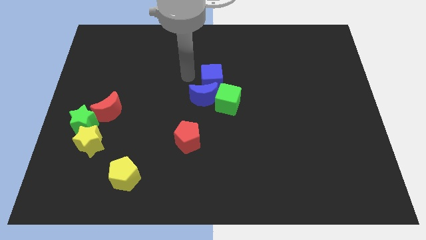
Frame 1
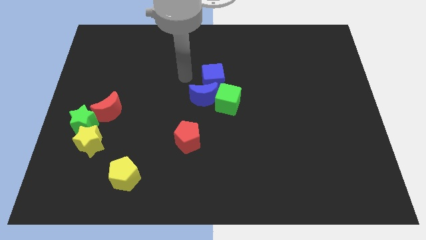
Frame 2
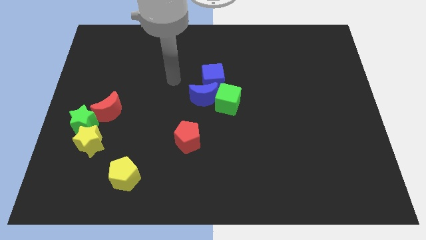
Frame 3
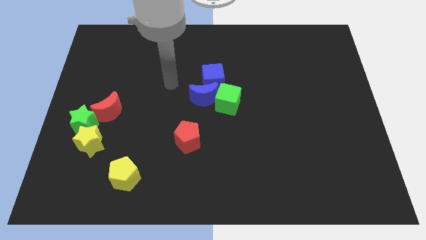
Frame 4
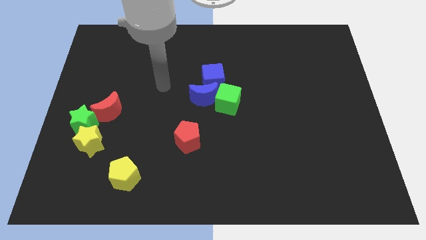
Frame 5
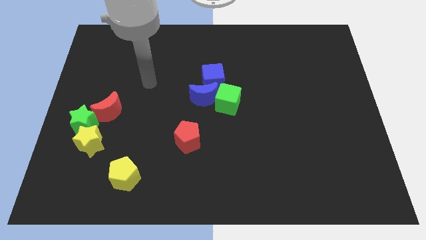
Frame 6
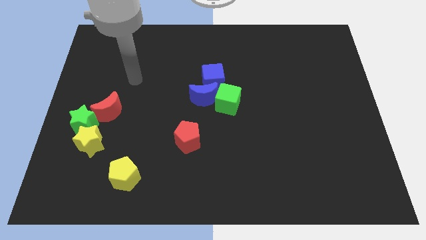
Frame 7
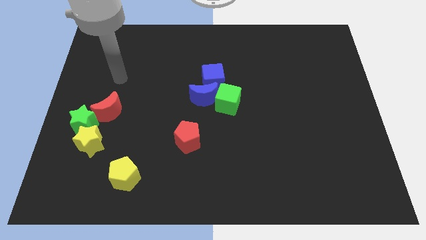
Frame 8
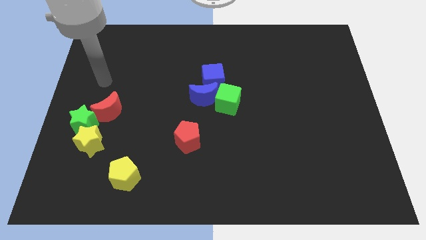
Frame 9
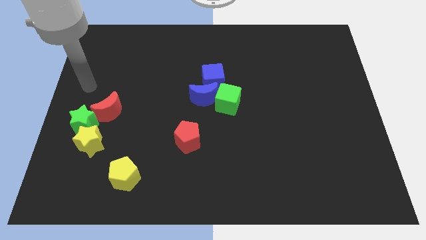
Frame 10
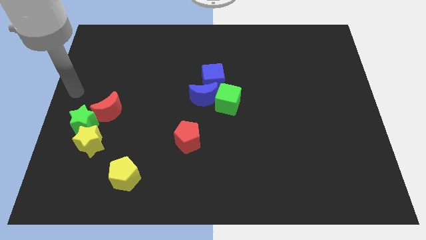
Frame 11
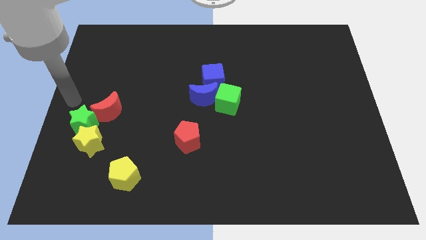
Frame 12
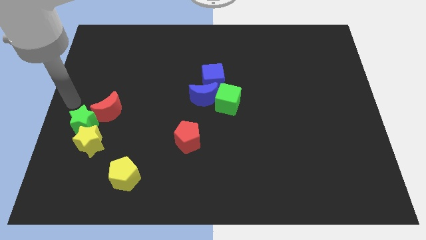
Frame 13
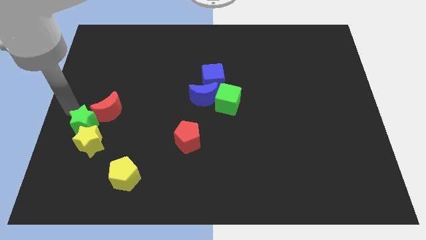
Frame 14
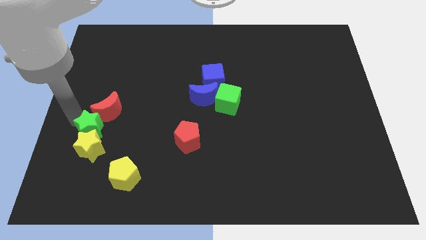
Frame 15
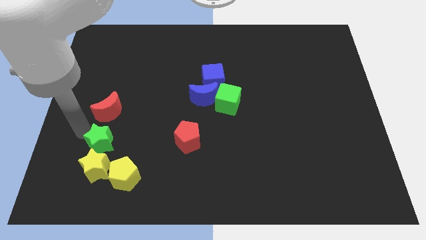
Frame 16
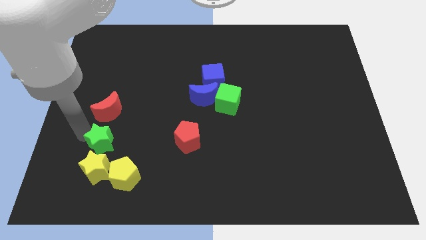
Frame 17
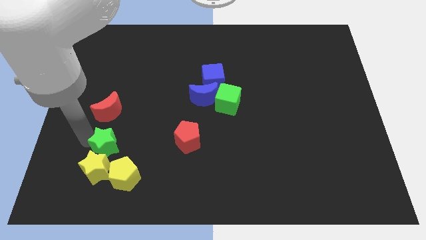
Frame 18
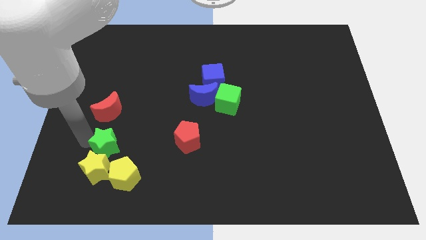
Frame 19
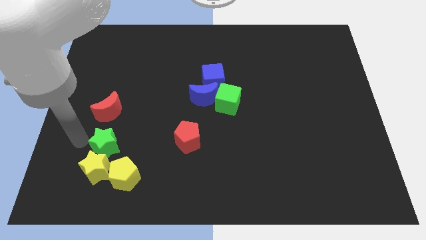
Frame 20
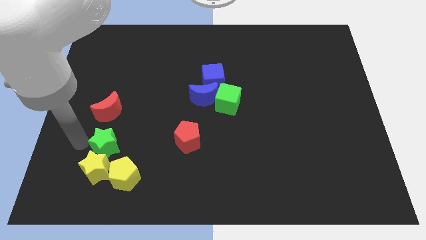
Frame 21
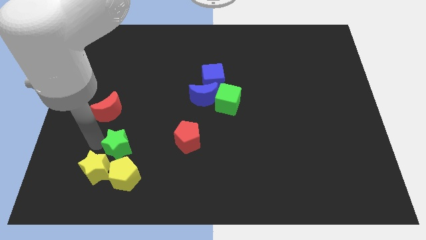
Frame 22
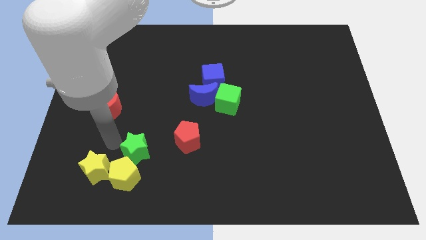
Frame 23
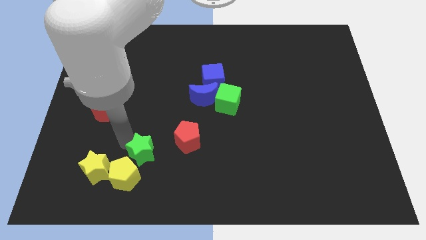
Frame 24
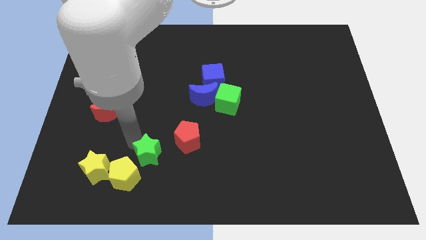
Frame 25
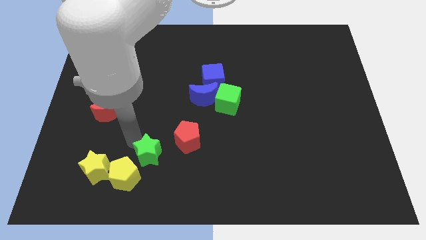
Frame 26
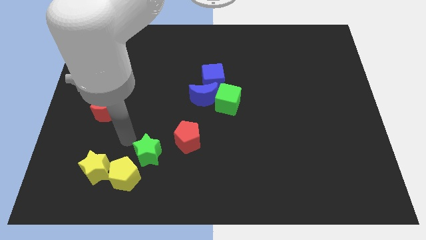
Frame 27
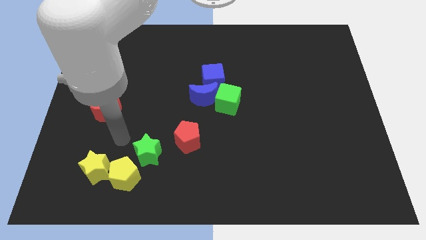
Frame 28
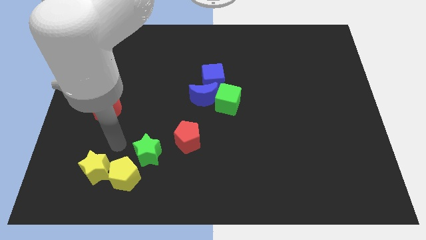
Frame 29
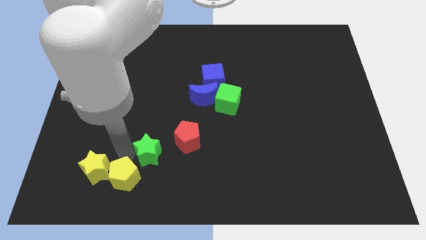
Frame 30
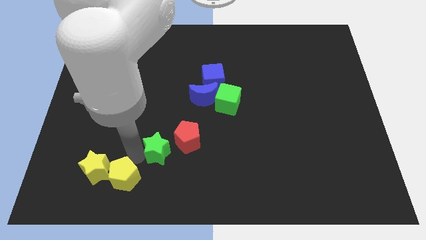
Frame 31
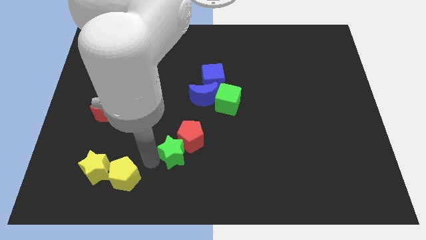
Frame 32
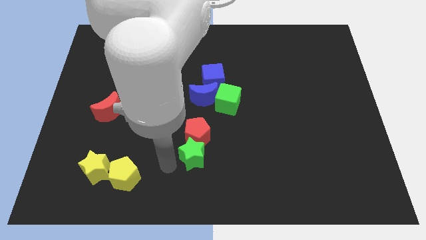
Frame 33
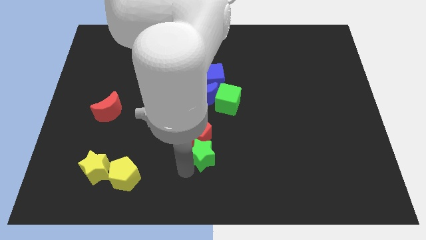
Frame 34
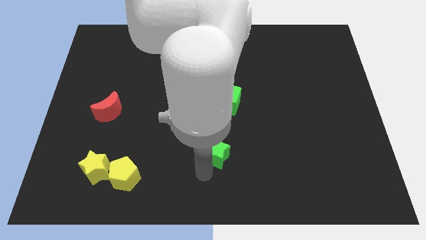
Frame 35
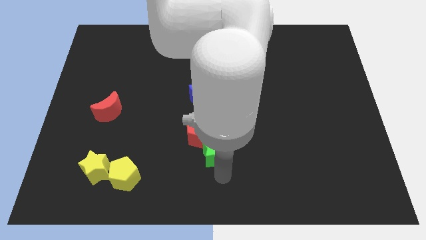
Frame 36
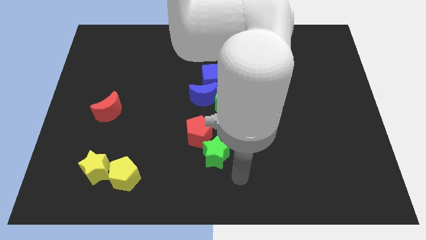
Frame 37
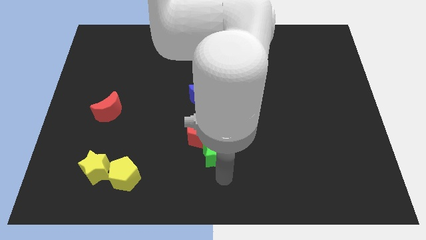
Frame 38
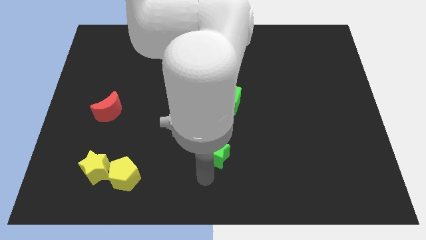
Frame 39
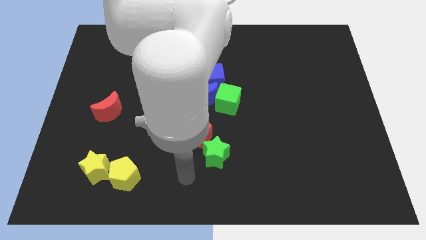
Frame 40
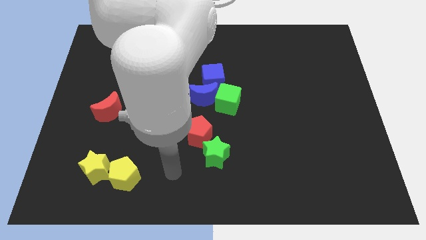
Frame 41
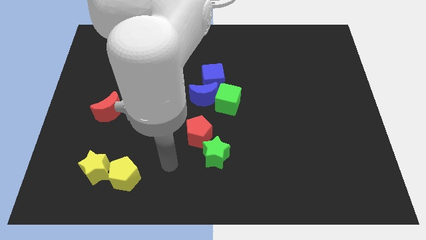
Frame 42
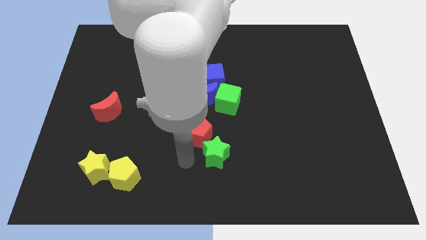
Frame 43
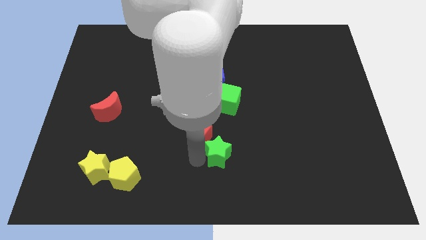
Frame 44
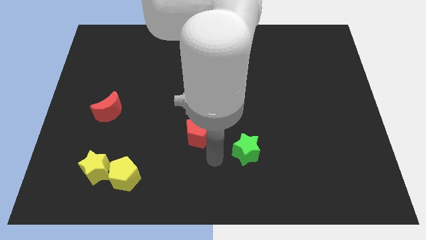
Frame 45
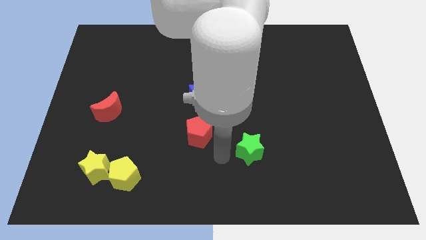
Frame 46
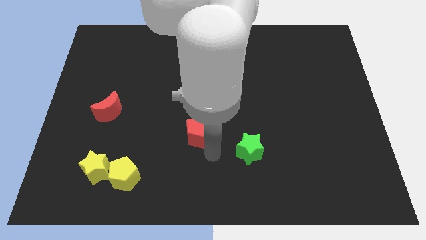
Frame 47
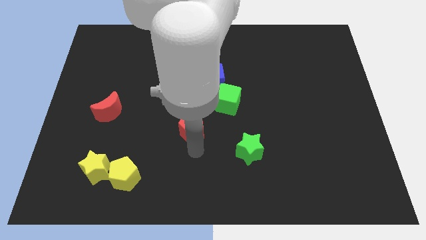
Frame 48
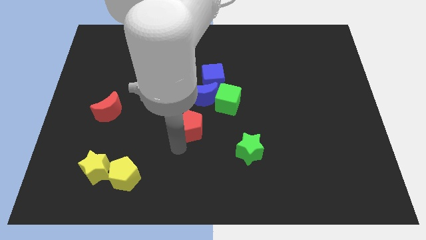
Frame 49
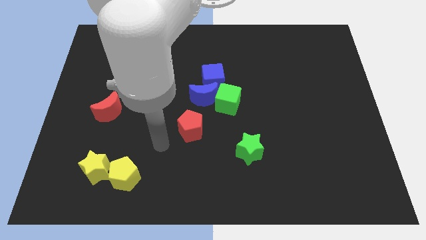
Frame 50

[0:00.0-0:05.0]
slide the green star to the center of the board

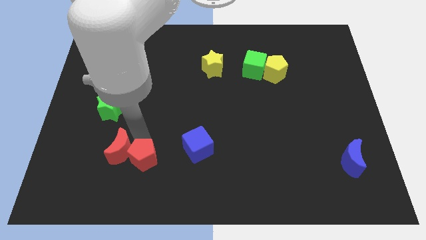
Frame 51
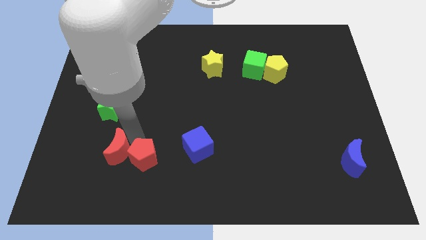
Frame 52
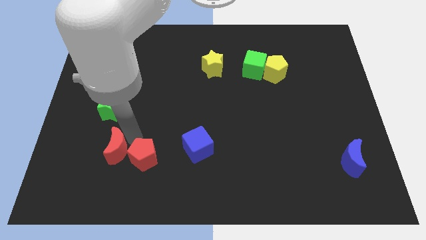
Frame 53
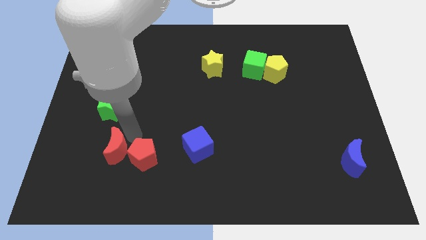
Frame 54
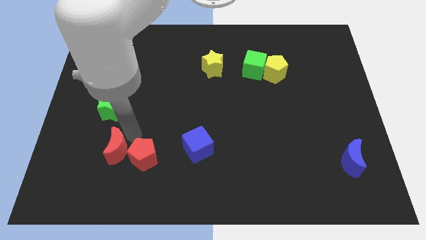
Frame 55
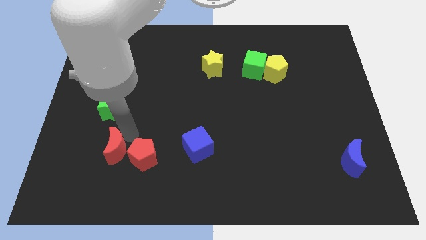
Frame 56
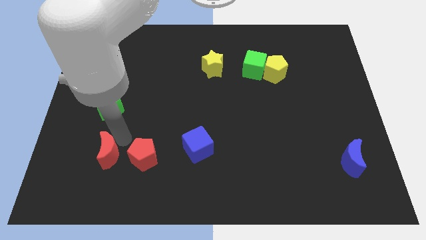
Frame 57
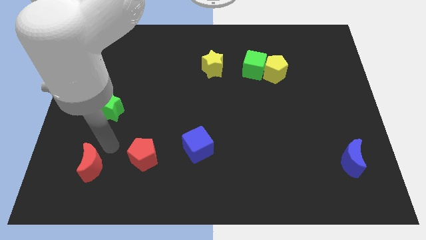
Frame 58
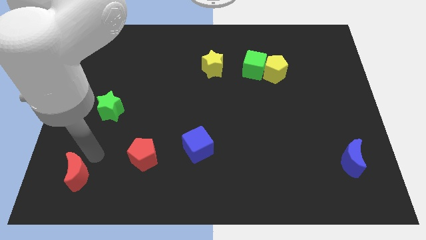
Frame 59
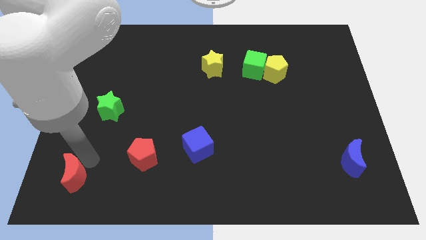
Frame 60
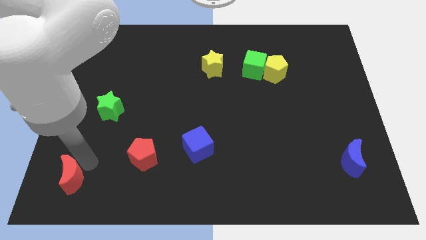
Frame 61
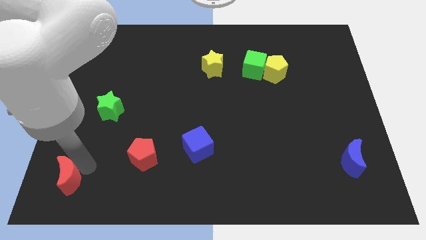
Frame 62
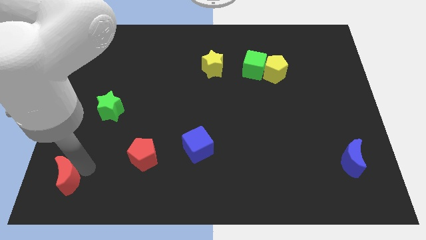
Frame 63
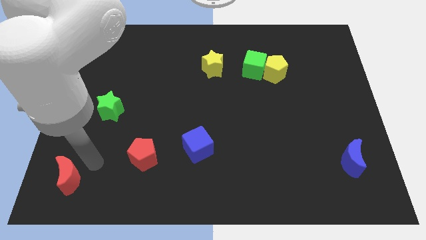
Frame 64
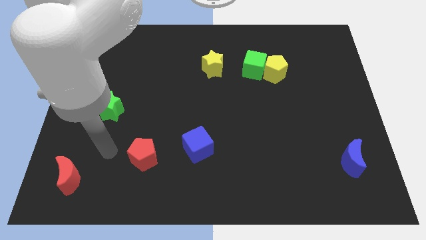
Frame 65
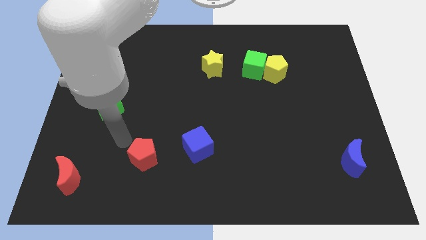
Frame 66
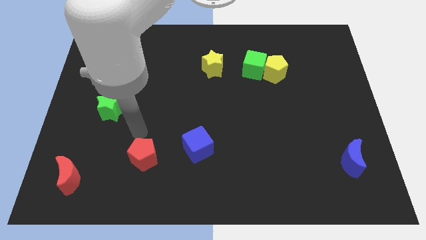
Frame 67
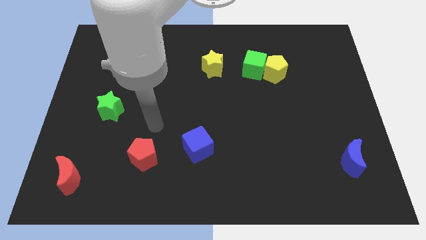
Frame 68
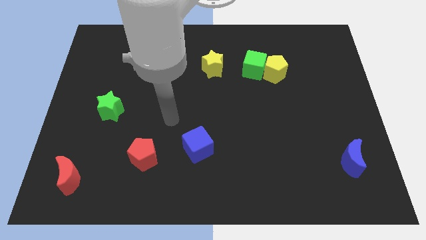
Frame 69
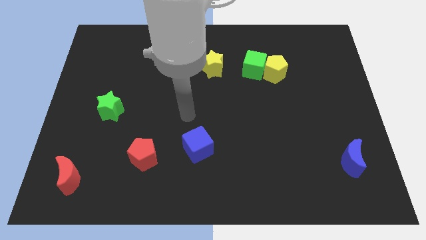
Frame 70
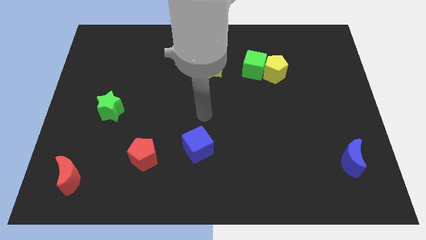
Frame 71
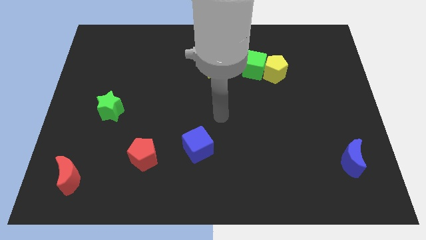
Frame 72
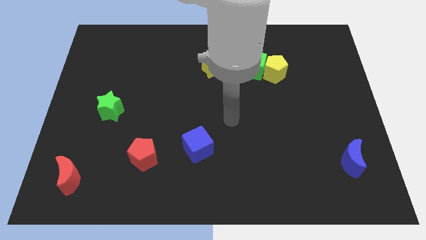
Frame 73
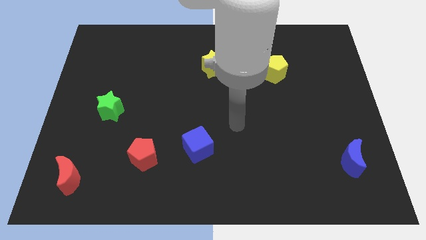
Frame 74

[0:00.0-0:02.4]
move the red crescent to the left bottom side

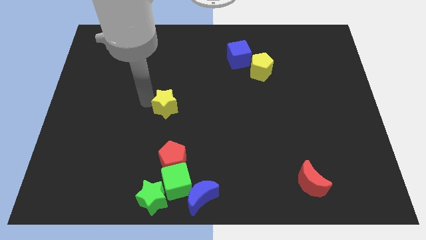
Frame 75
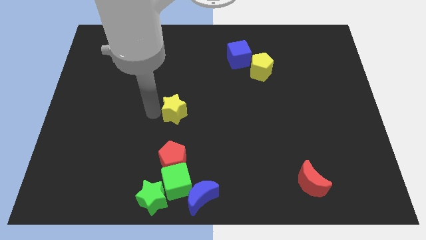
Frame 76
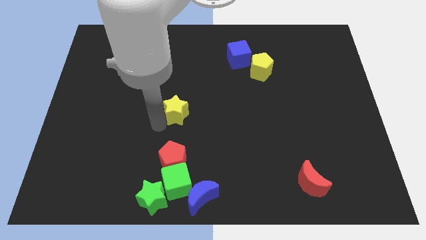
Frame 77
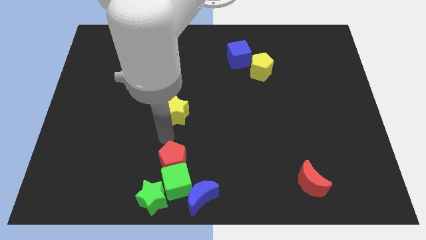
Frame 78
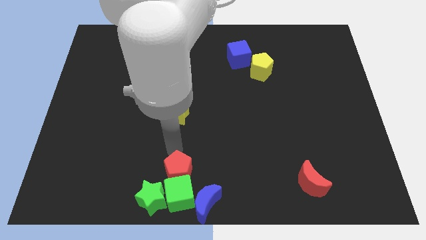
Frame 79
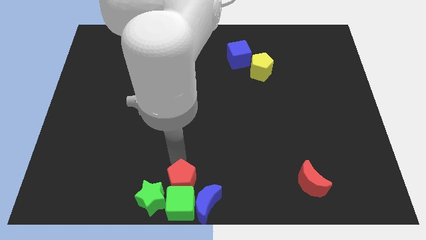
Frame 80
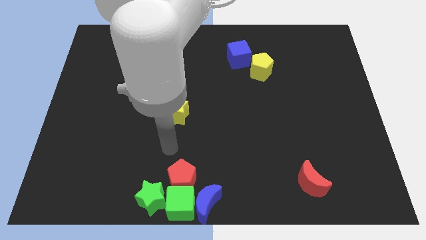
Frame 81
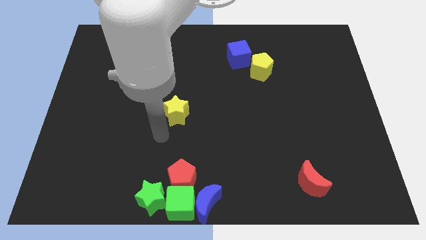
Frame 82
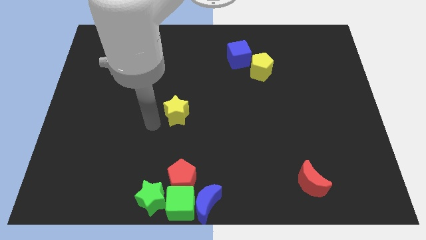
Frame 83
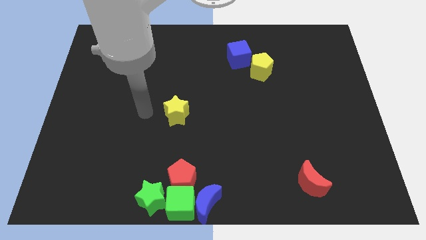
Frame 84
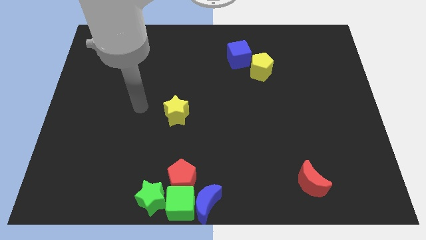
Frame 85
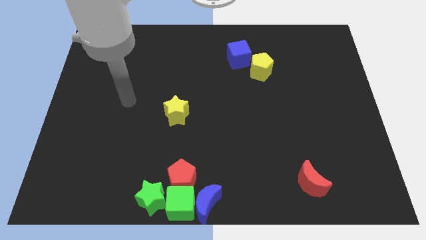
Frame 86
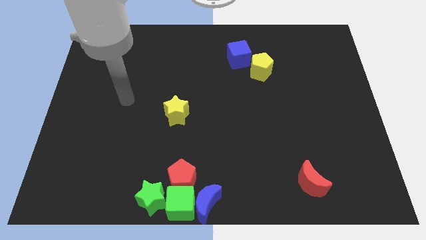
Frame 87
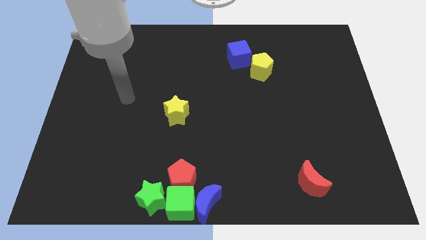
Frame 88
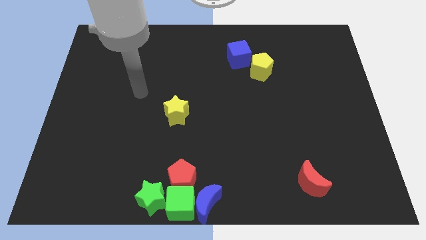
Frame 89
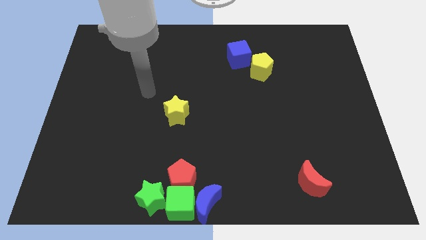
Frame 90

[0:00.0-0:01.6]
push green cube between green star and blue crescent with red pentagon
